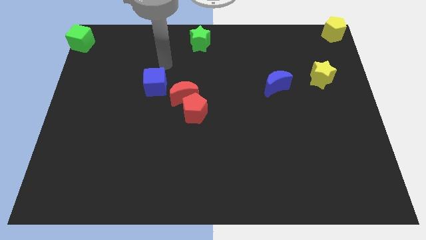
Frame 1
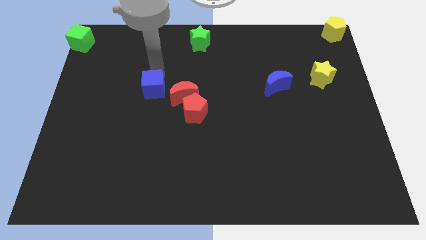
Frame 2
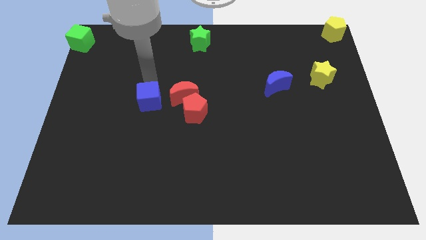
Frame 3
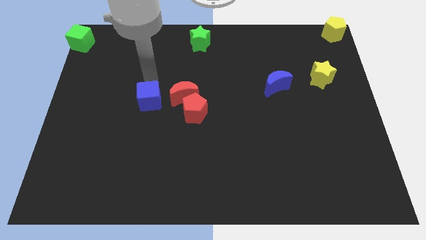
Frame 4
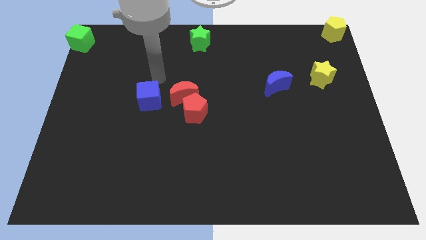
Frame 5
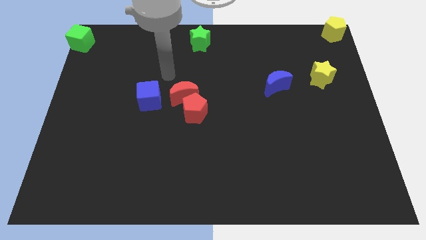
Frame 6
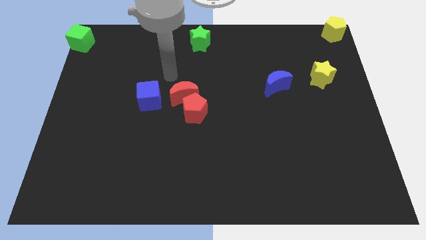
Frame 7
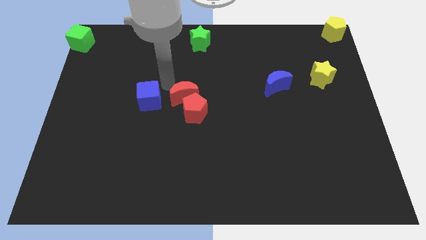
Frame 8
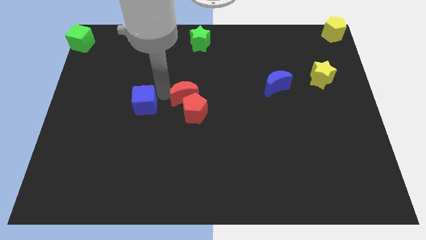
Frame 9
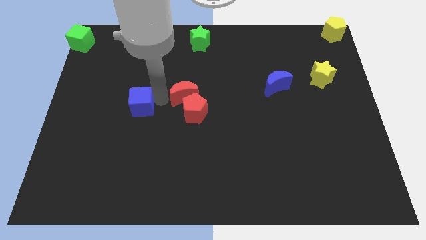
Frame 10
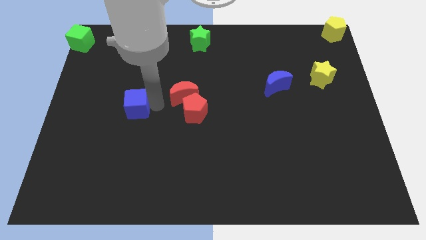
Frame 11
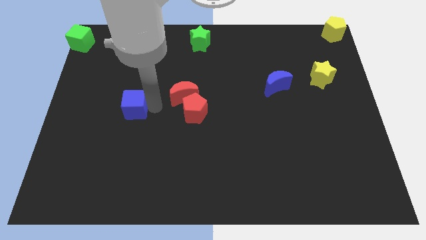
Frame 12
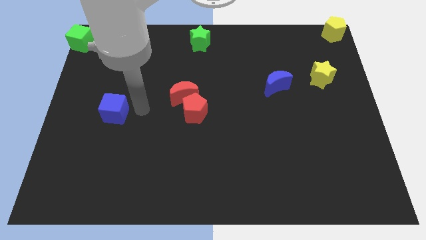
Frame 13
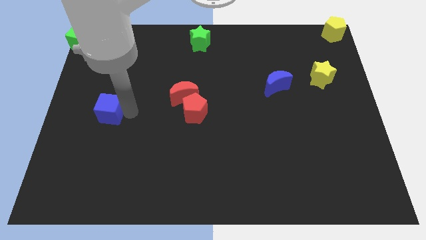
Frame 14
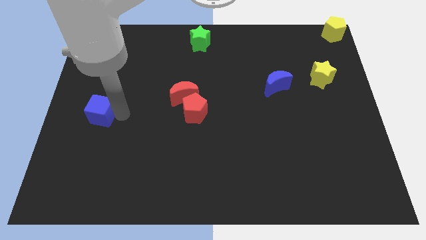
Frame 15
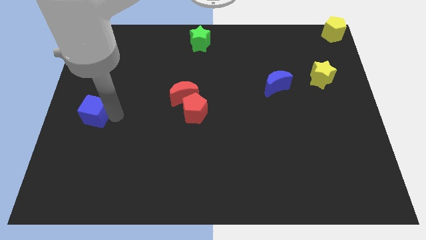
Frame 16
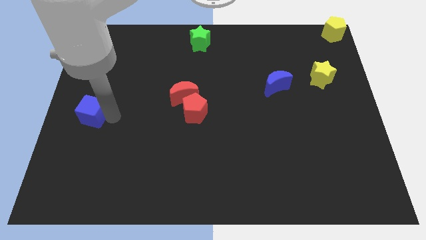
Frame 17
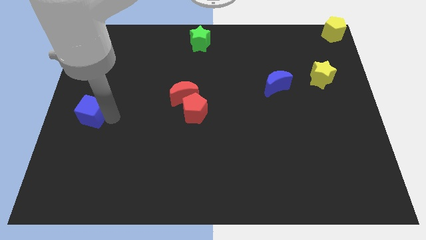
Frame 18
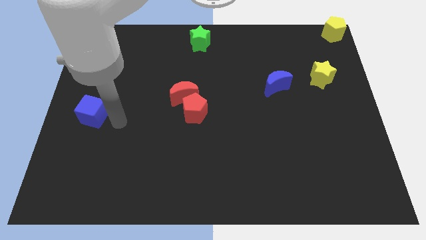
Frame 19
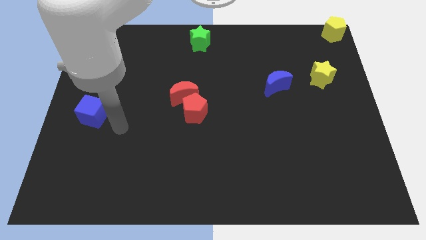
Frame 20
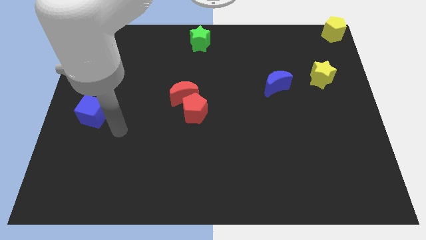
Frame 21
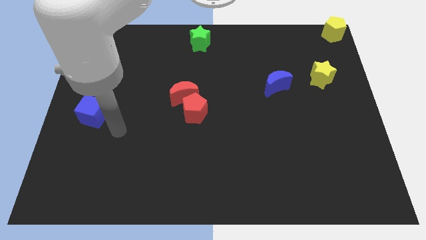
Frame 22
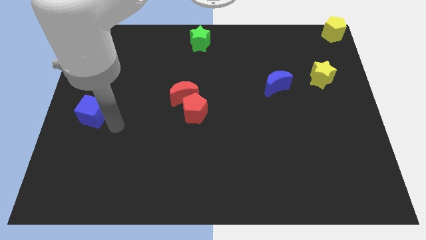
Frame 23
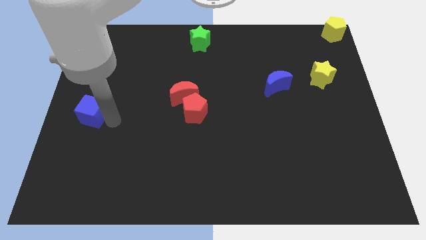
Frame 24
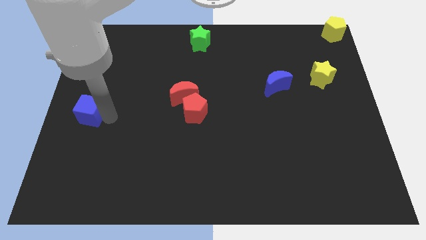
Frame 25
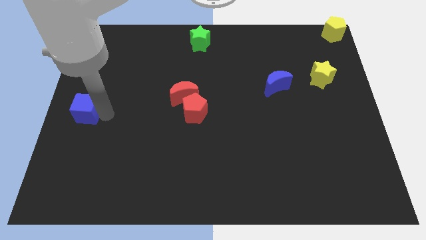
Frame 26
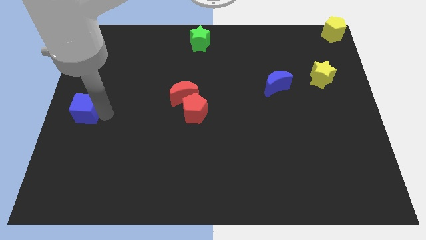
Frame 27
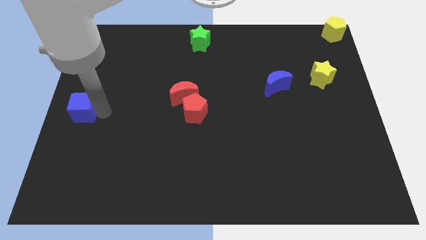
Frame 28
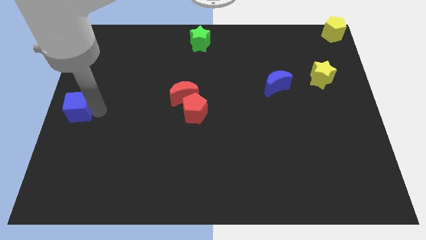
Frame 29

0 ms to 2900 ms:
move the blue cube to the center left

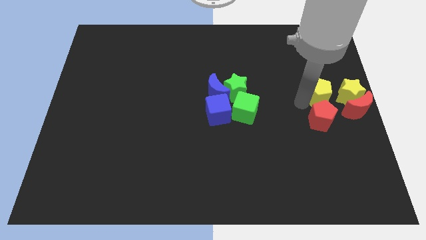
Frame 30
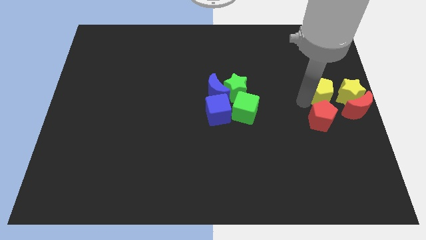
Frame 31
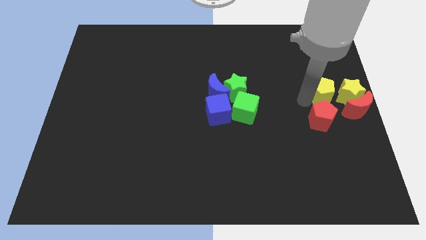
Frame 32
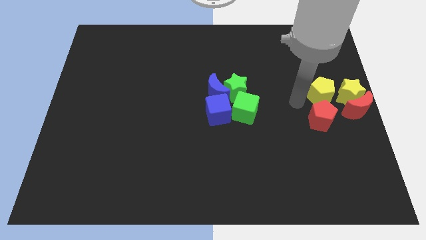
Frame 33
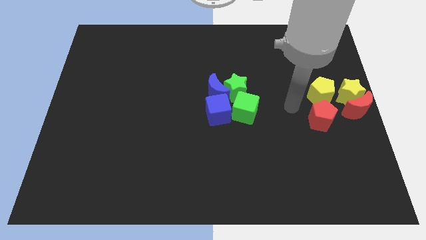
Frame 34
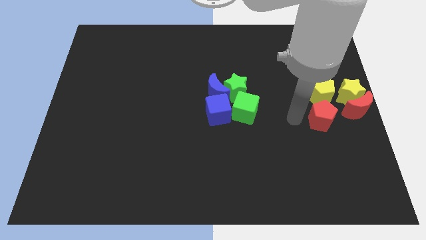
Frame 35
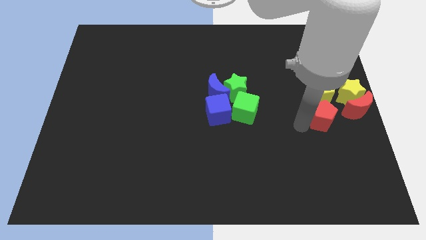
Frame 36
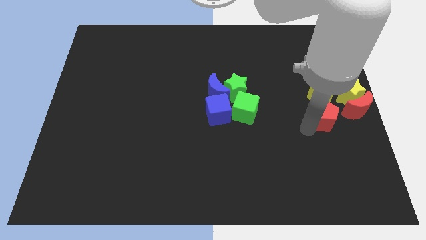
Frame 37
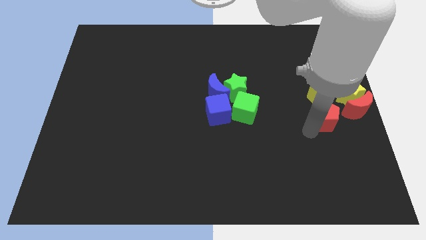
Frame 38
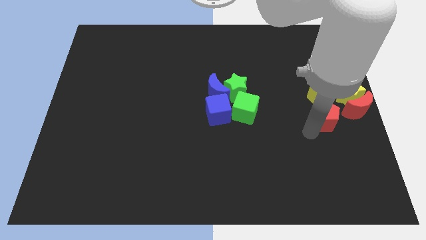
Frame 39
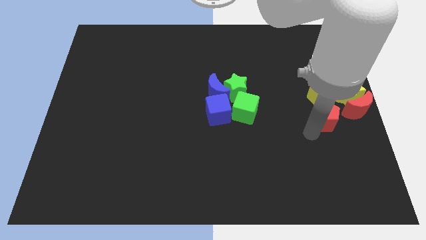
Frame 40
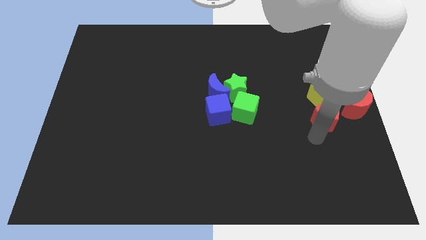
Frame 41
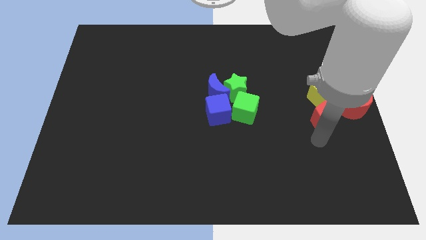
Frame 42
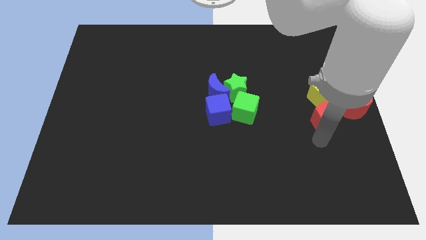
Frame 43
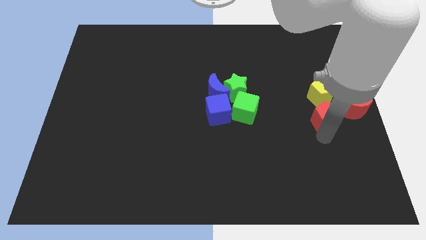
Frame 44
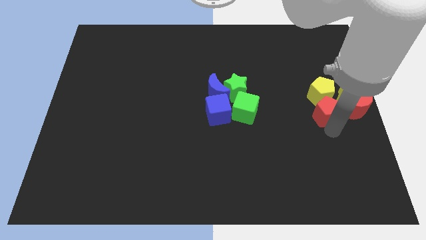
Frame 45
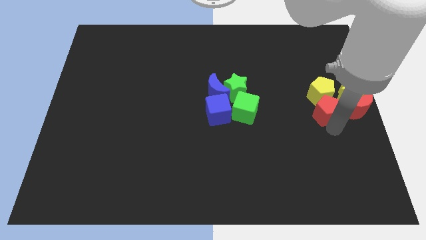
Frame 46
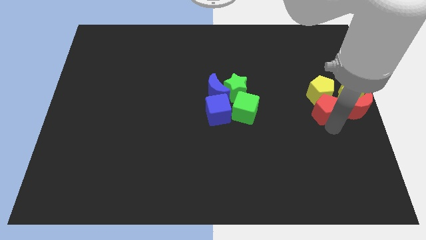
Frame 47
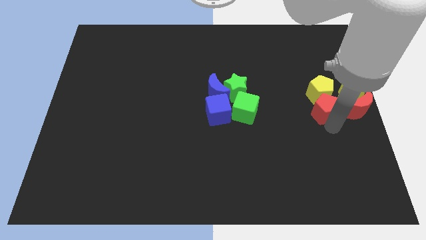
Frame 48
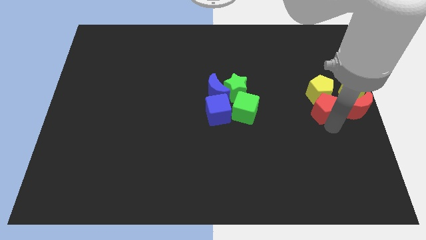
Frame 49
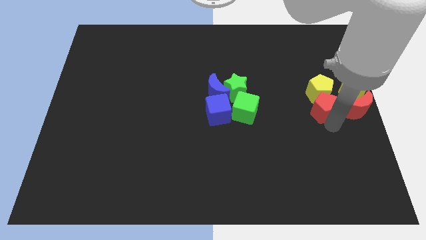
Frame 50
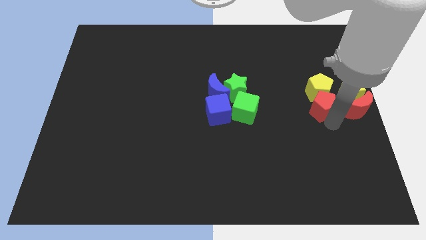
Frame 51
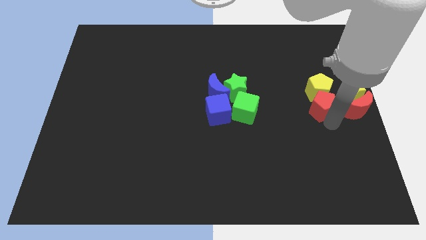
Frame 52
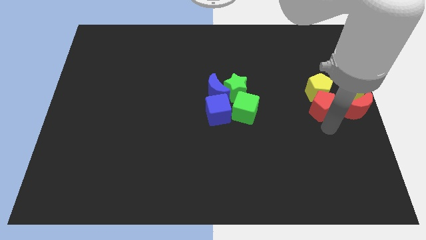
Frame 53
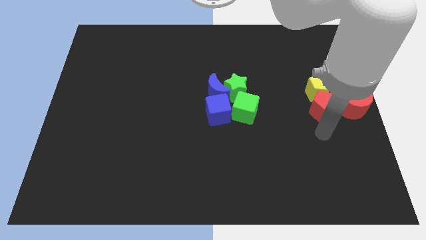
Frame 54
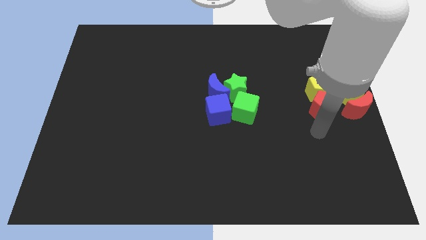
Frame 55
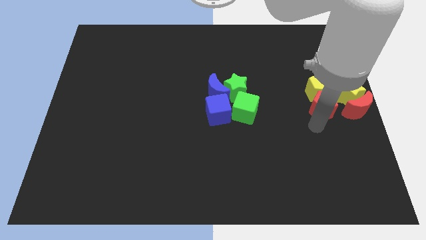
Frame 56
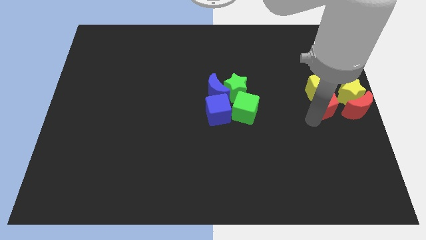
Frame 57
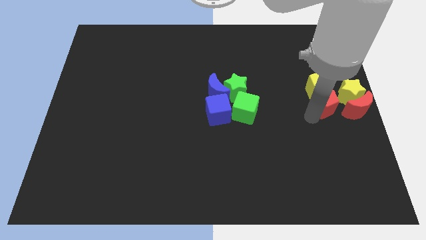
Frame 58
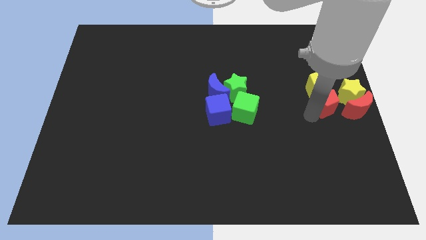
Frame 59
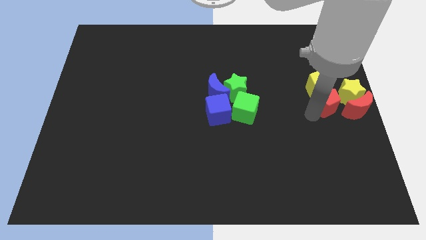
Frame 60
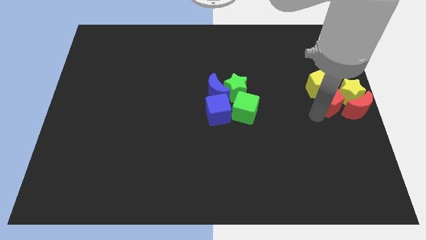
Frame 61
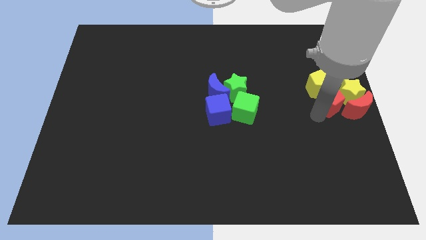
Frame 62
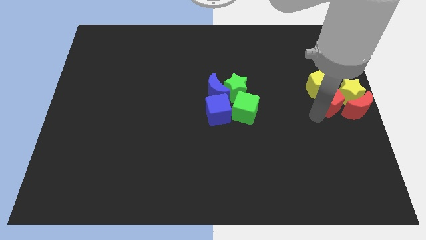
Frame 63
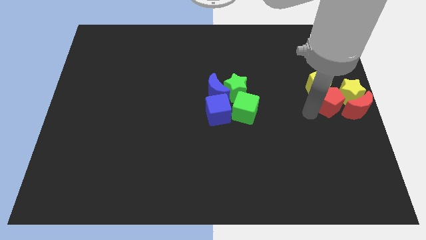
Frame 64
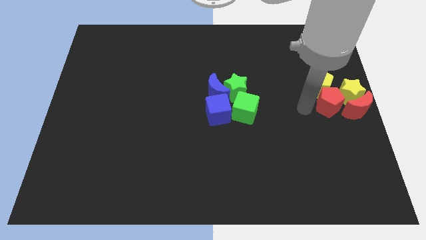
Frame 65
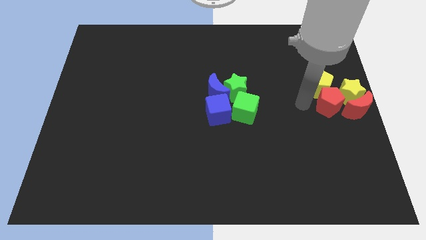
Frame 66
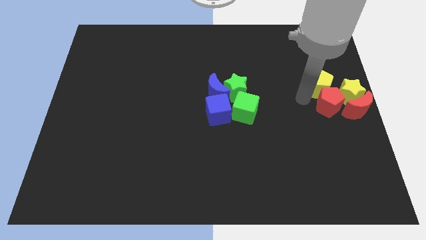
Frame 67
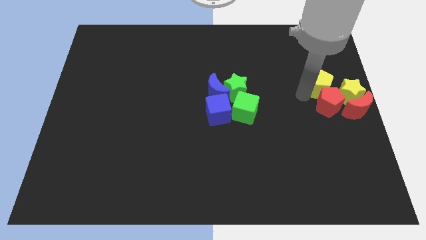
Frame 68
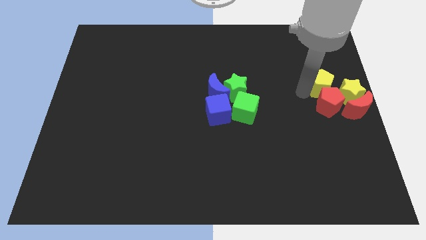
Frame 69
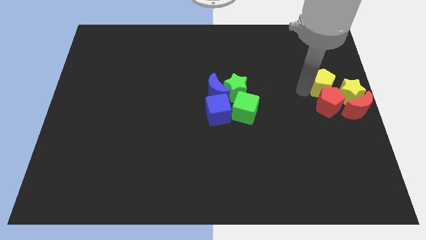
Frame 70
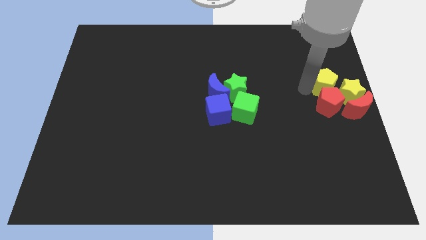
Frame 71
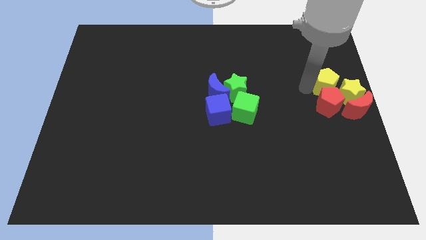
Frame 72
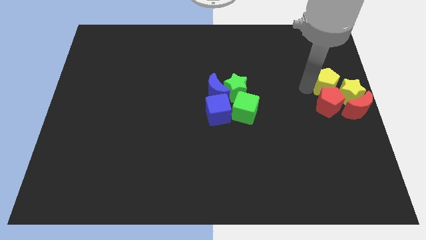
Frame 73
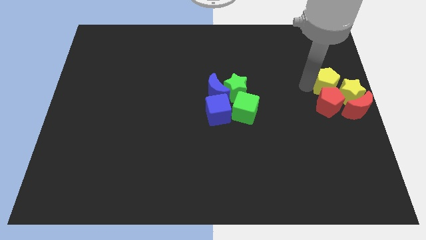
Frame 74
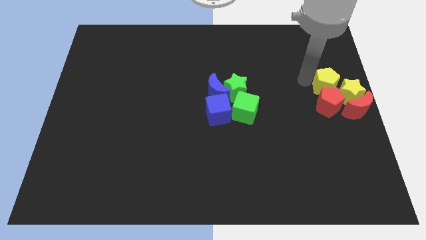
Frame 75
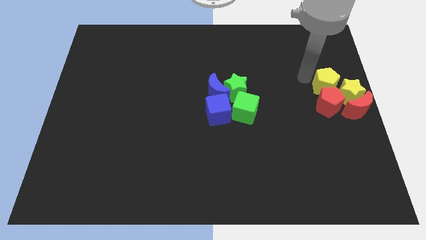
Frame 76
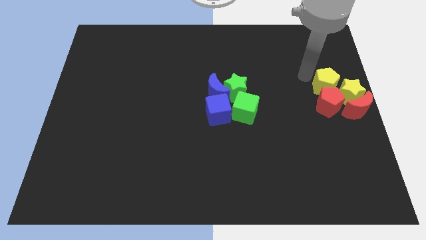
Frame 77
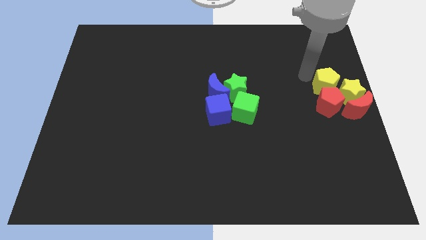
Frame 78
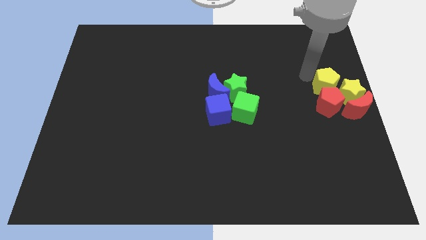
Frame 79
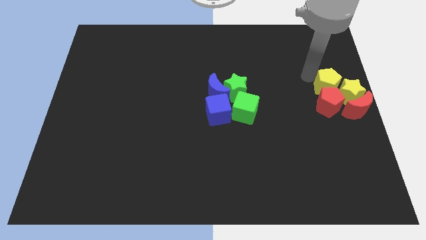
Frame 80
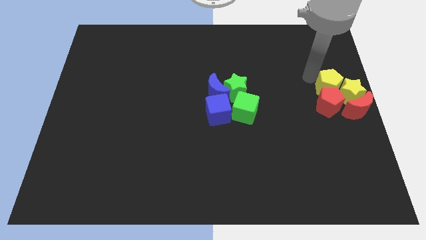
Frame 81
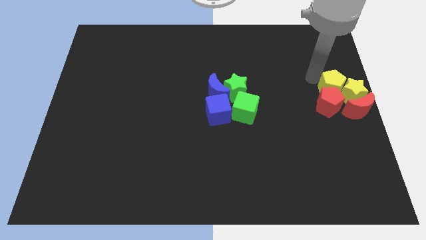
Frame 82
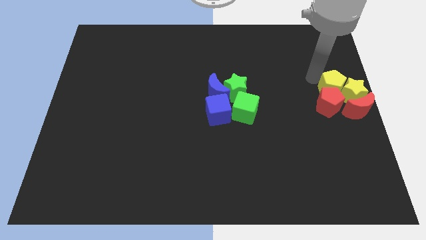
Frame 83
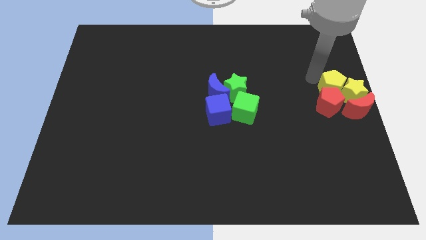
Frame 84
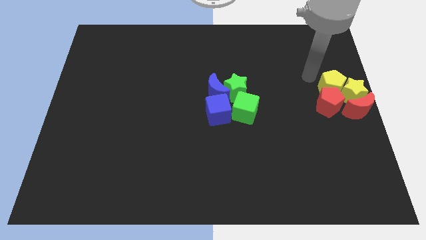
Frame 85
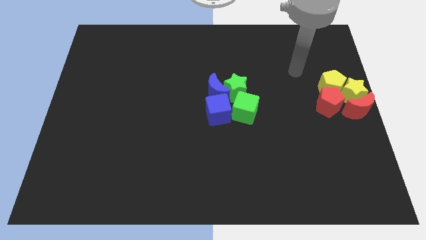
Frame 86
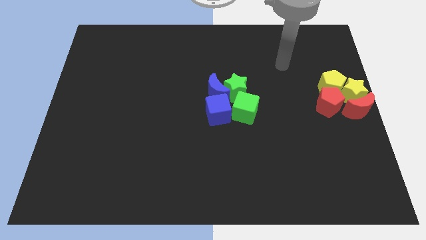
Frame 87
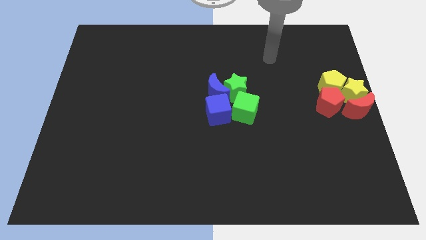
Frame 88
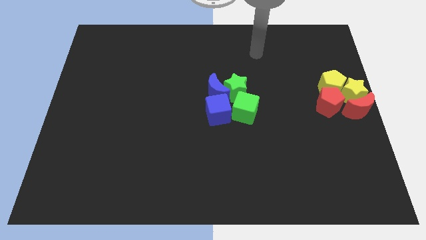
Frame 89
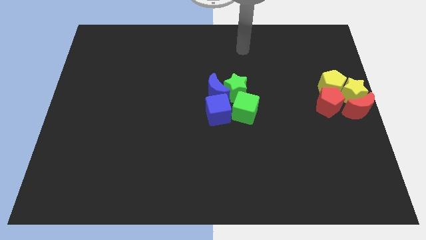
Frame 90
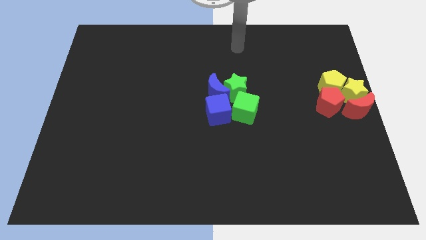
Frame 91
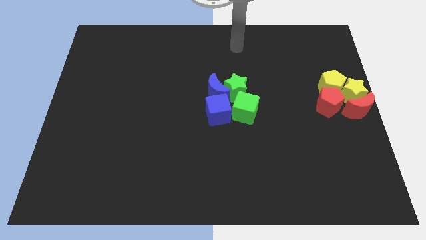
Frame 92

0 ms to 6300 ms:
push the red and yellow pentagon into a group of blocks
